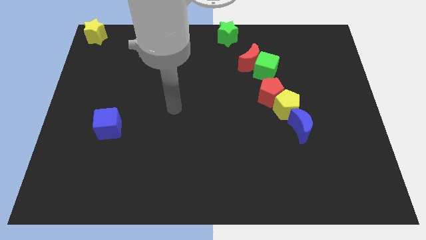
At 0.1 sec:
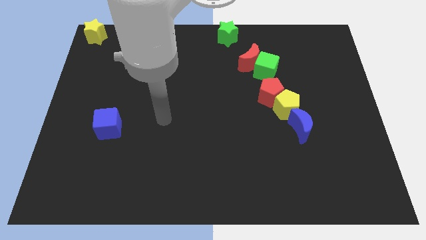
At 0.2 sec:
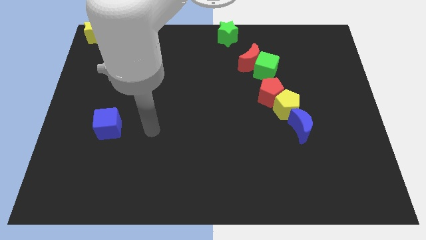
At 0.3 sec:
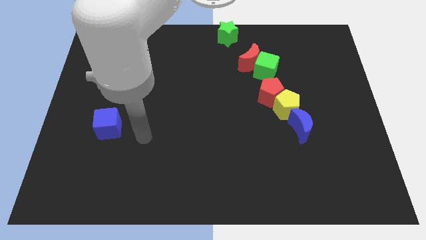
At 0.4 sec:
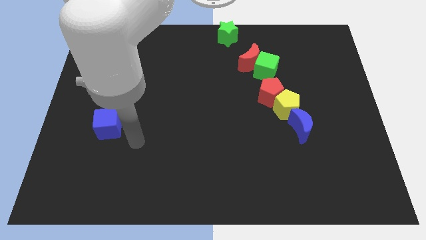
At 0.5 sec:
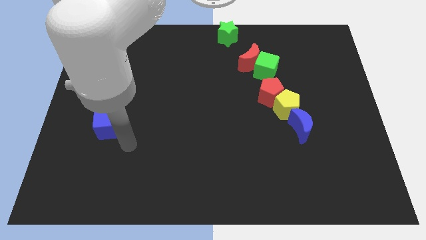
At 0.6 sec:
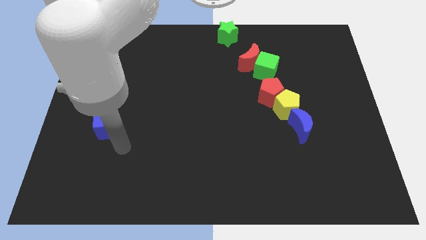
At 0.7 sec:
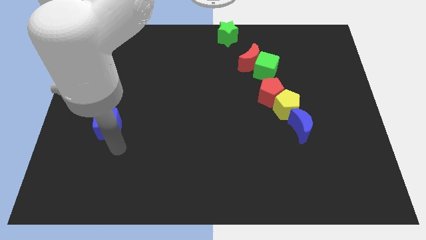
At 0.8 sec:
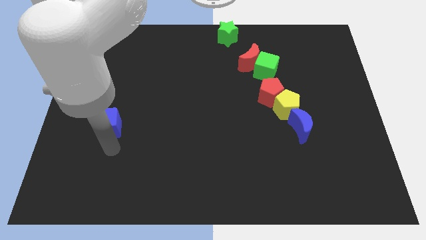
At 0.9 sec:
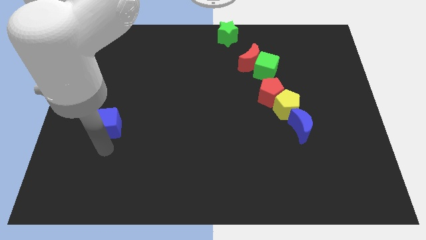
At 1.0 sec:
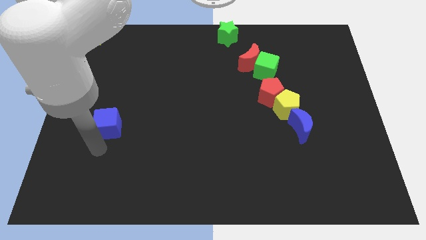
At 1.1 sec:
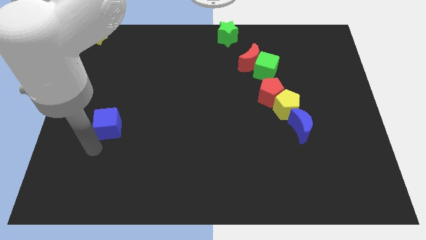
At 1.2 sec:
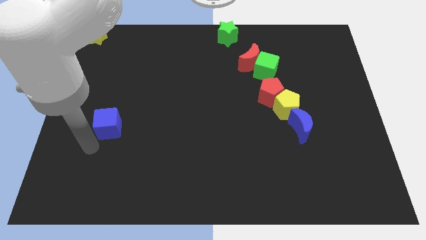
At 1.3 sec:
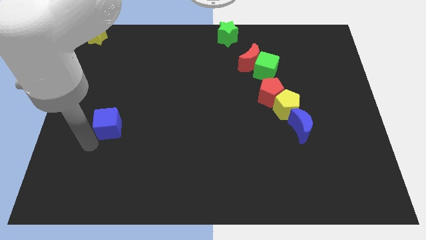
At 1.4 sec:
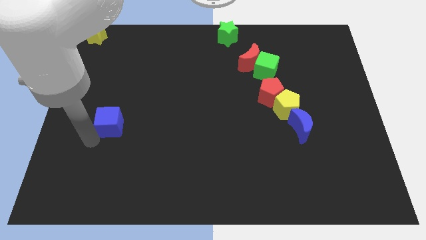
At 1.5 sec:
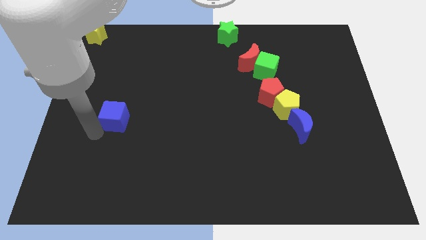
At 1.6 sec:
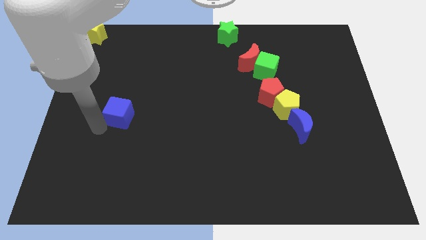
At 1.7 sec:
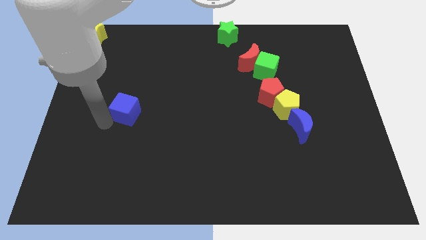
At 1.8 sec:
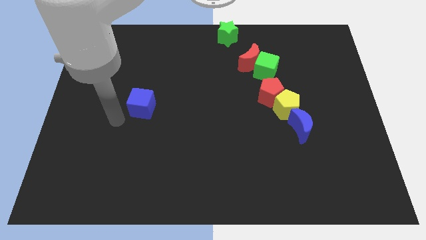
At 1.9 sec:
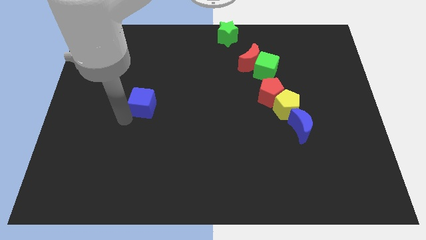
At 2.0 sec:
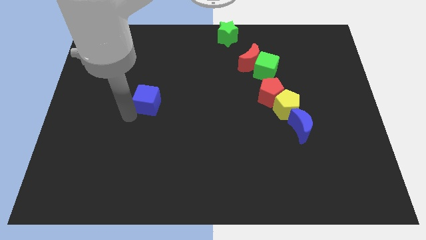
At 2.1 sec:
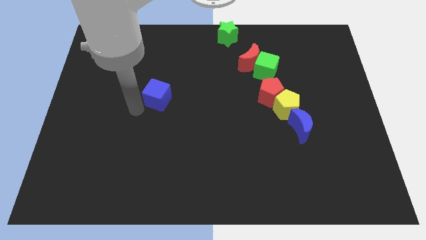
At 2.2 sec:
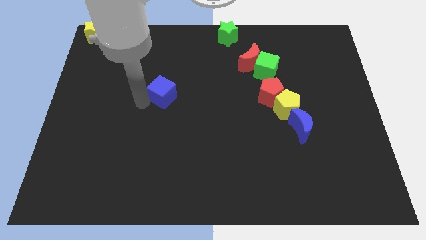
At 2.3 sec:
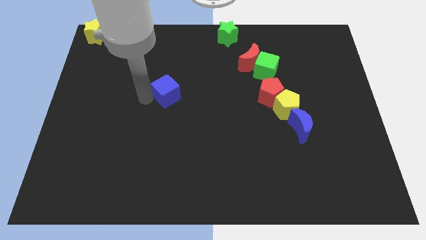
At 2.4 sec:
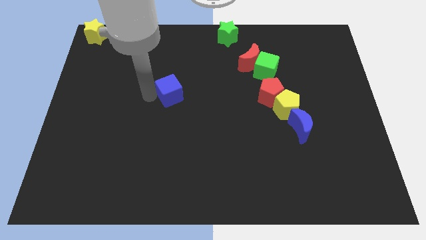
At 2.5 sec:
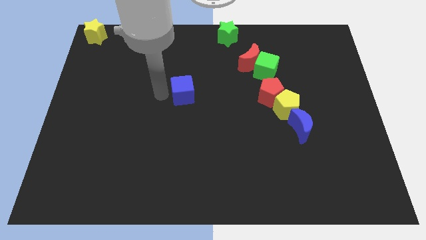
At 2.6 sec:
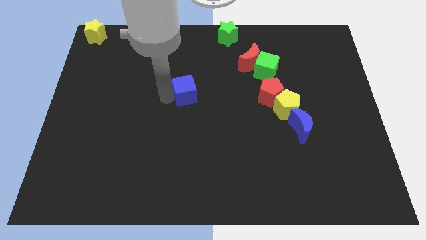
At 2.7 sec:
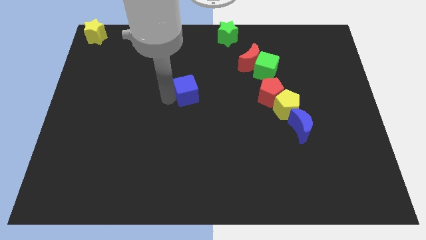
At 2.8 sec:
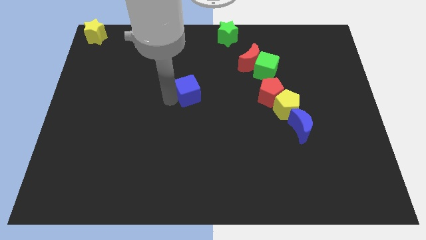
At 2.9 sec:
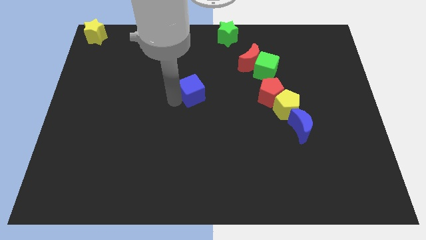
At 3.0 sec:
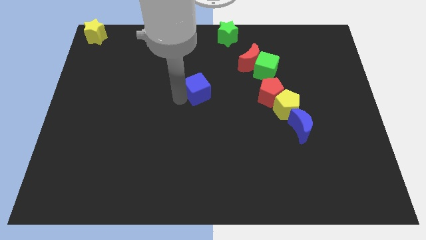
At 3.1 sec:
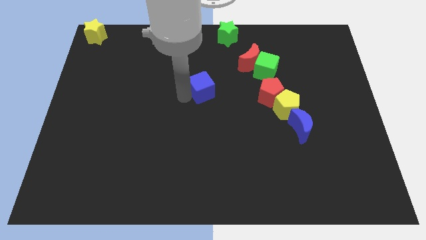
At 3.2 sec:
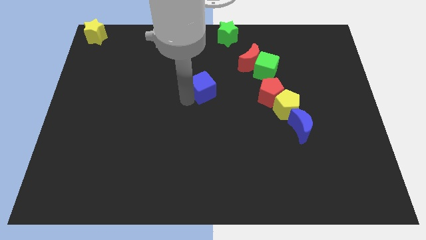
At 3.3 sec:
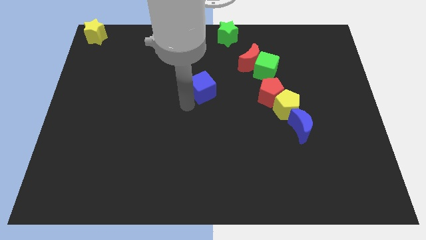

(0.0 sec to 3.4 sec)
move the blue cube towards the center of the board

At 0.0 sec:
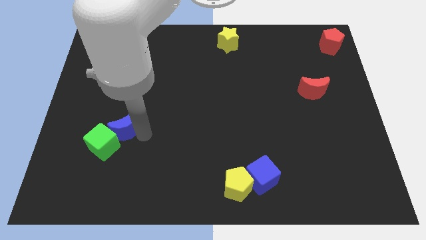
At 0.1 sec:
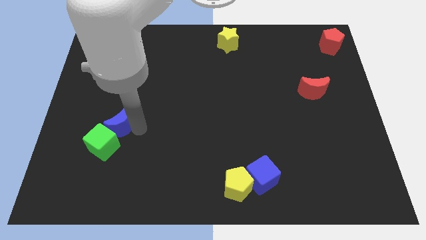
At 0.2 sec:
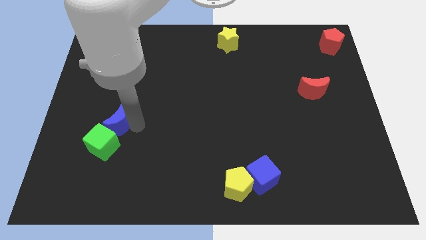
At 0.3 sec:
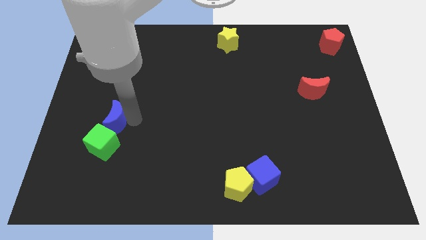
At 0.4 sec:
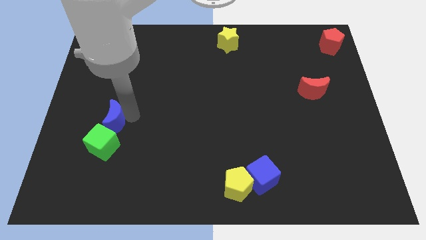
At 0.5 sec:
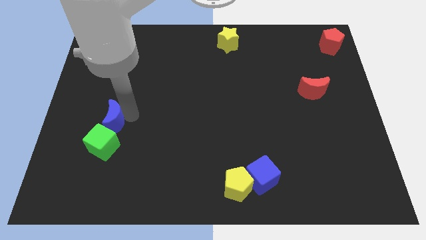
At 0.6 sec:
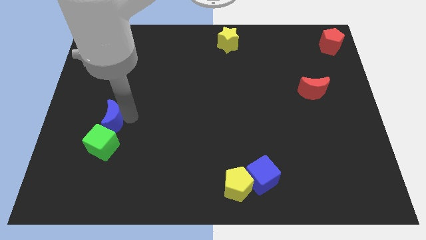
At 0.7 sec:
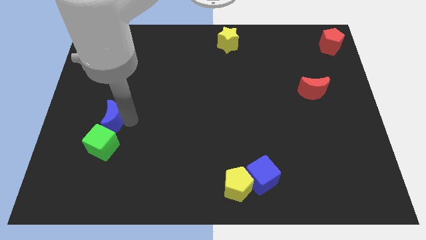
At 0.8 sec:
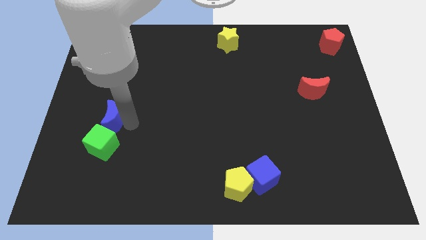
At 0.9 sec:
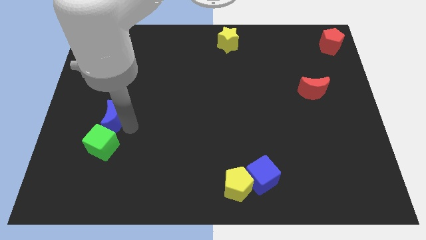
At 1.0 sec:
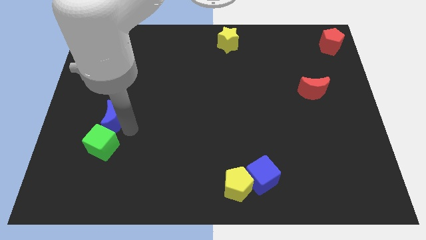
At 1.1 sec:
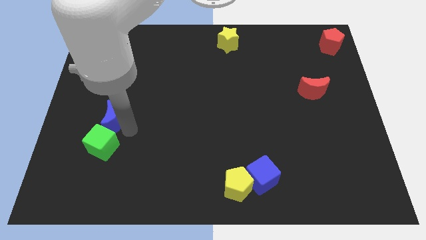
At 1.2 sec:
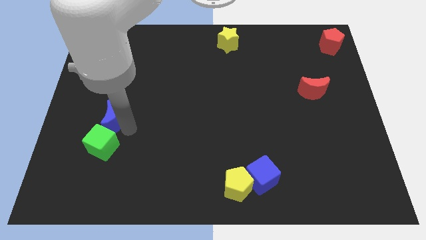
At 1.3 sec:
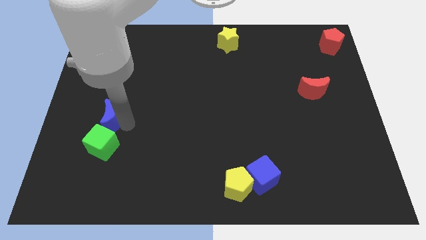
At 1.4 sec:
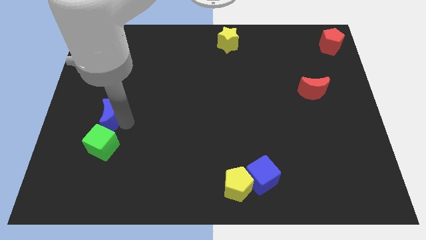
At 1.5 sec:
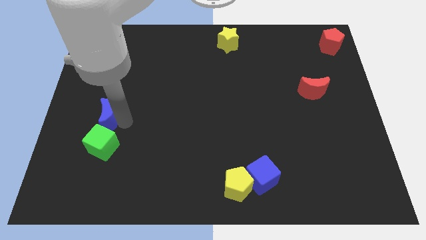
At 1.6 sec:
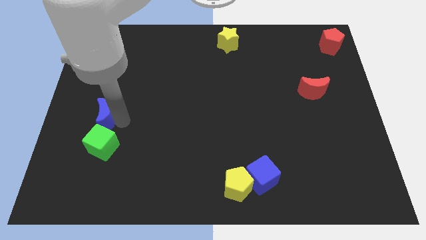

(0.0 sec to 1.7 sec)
place the blue moon above the green cube

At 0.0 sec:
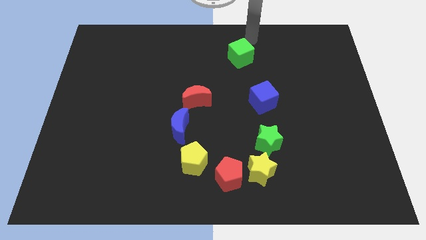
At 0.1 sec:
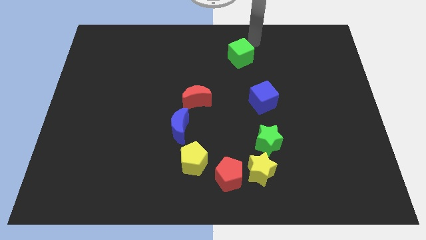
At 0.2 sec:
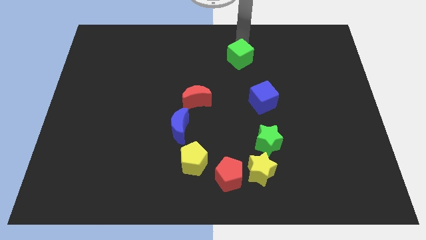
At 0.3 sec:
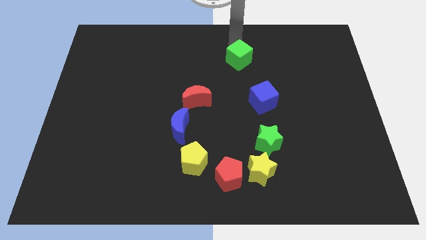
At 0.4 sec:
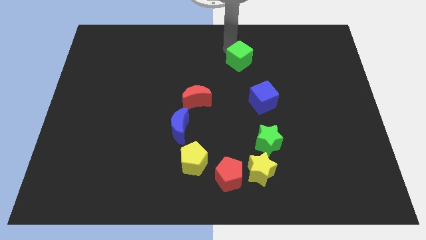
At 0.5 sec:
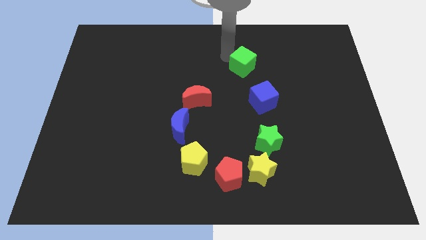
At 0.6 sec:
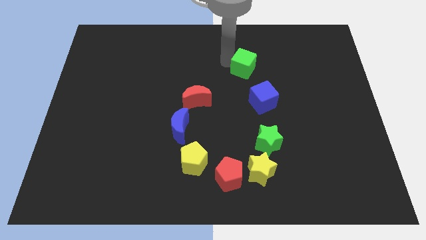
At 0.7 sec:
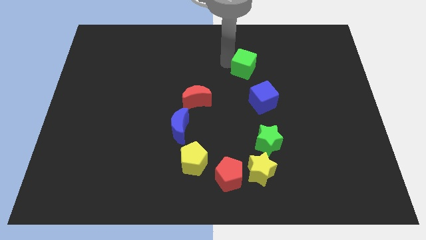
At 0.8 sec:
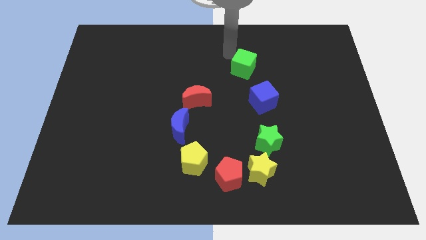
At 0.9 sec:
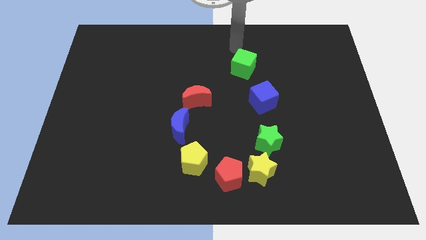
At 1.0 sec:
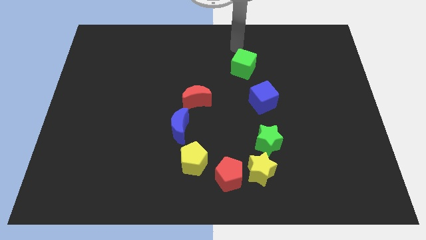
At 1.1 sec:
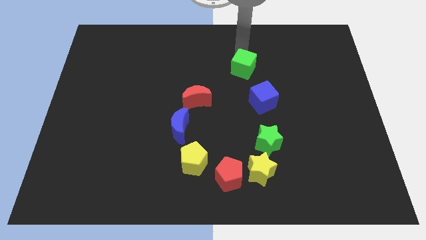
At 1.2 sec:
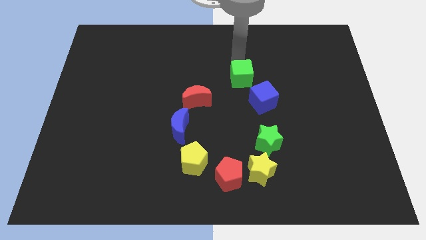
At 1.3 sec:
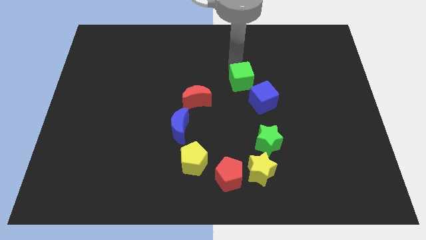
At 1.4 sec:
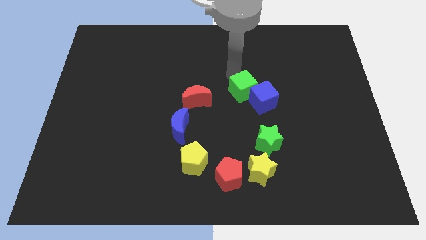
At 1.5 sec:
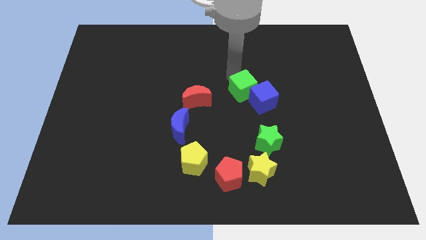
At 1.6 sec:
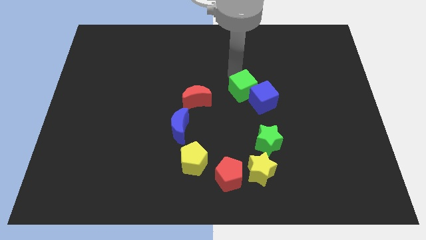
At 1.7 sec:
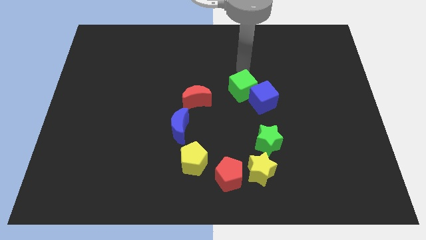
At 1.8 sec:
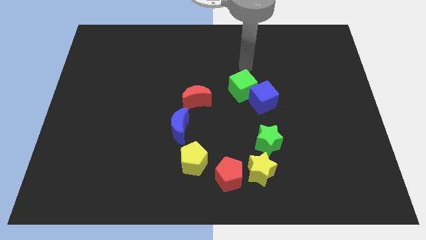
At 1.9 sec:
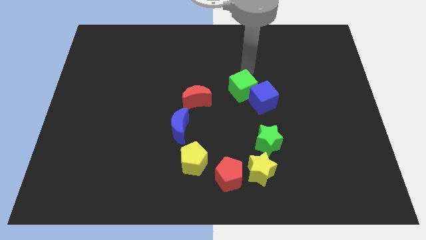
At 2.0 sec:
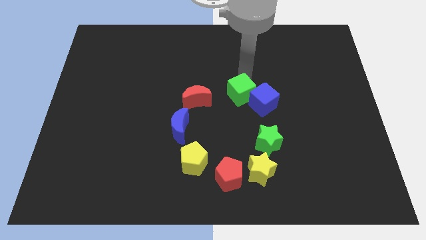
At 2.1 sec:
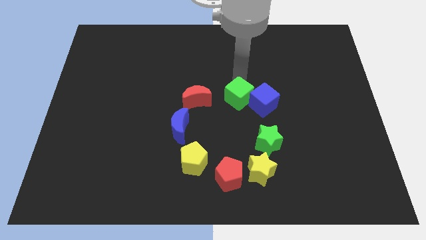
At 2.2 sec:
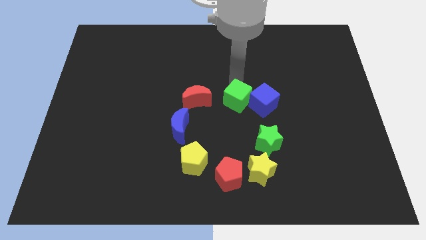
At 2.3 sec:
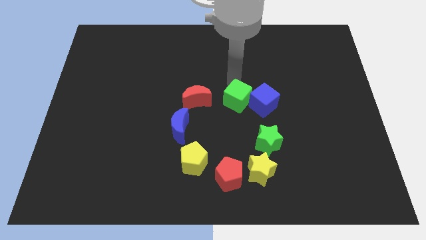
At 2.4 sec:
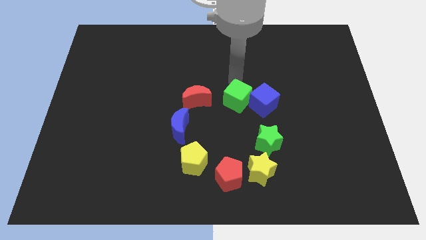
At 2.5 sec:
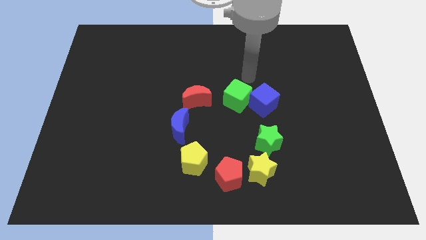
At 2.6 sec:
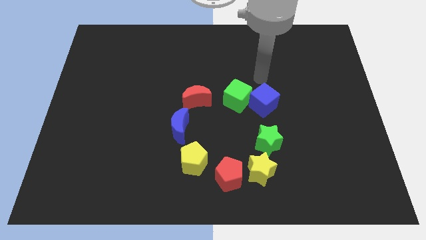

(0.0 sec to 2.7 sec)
slide the green cube between the red moon and blue cube

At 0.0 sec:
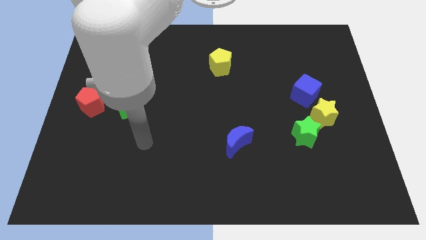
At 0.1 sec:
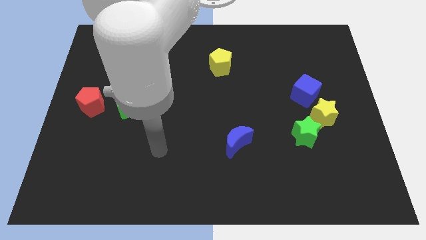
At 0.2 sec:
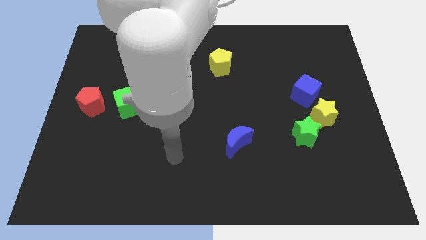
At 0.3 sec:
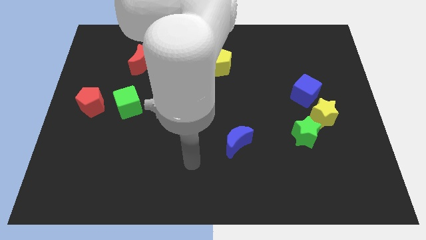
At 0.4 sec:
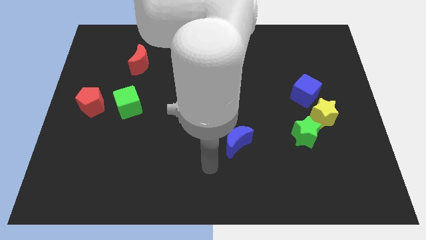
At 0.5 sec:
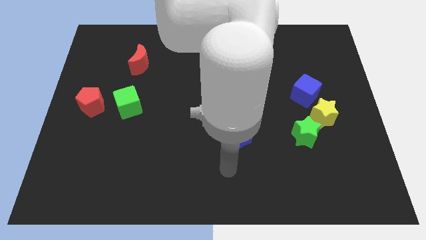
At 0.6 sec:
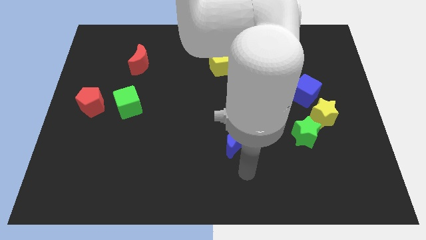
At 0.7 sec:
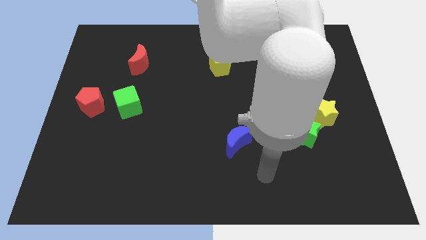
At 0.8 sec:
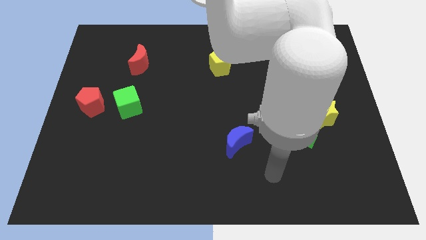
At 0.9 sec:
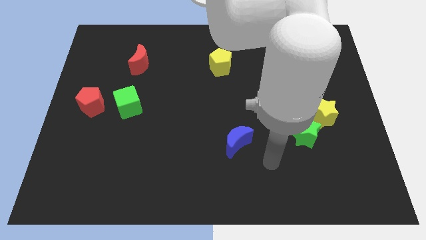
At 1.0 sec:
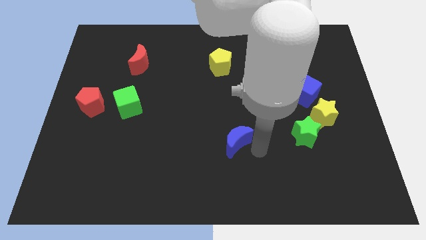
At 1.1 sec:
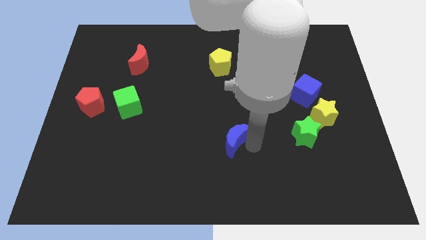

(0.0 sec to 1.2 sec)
move the arm close to the blue crescent
